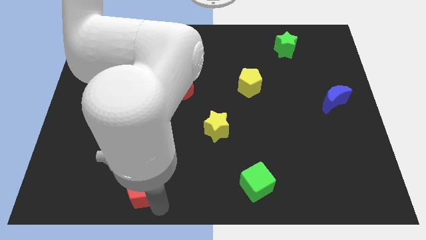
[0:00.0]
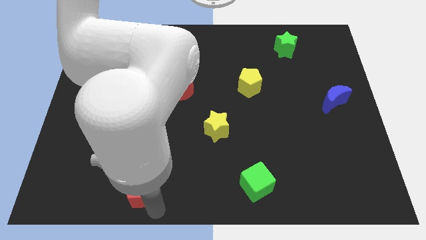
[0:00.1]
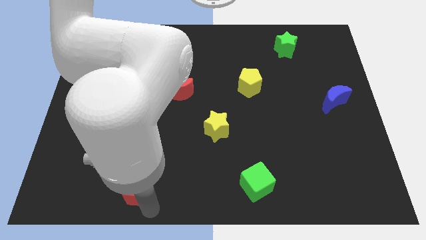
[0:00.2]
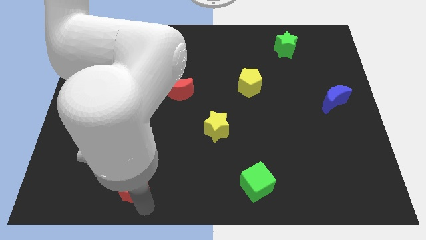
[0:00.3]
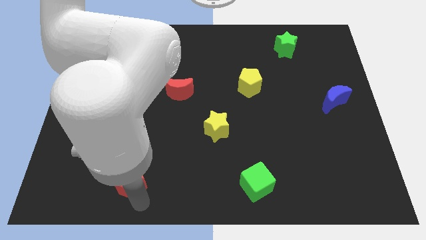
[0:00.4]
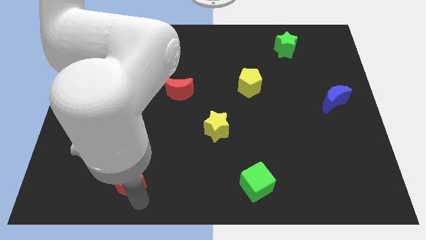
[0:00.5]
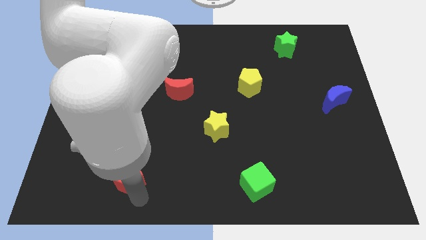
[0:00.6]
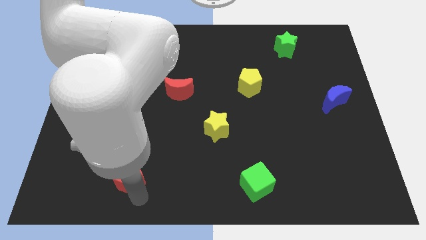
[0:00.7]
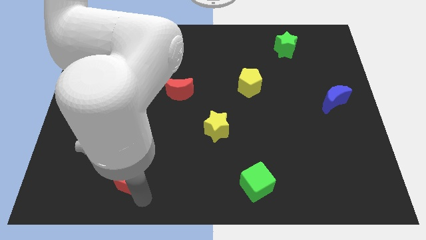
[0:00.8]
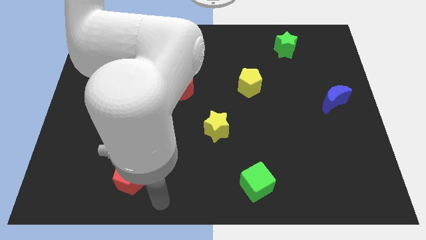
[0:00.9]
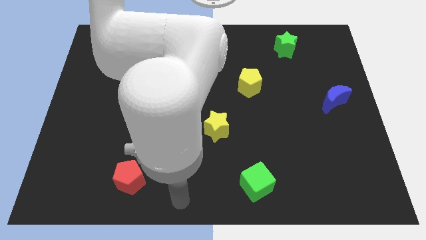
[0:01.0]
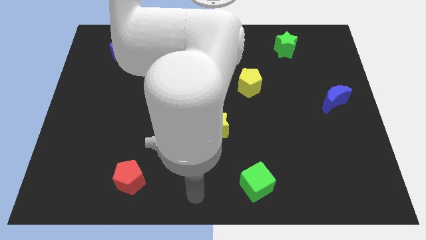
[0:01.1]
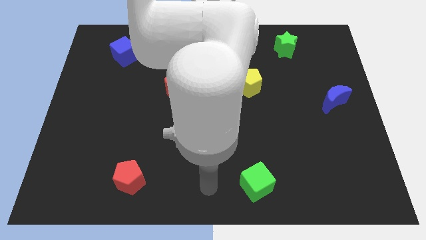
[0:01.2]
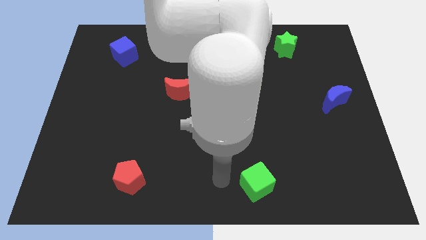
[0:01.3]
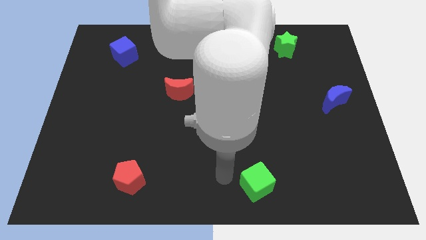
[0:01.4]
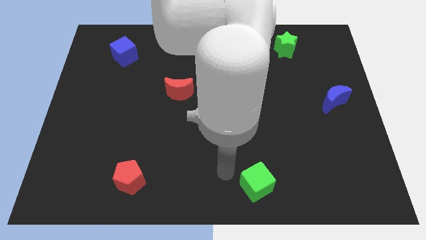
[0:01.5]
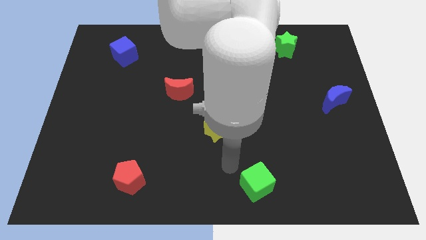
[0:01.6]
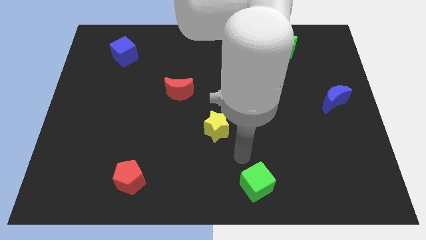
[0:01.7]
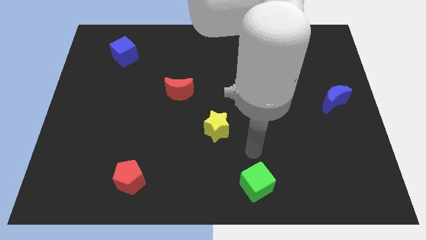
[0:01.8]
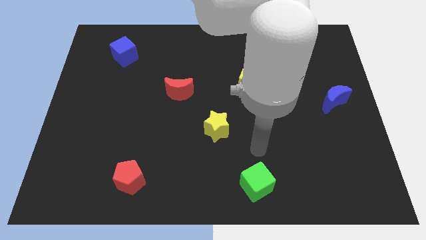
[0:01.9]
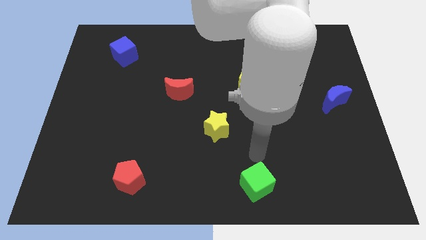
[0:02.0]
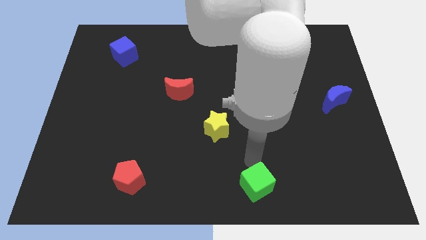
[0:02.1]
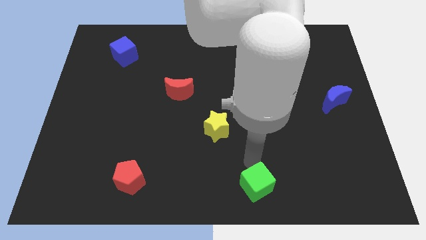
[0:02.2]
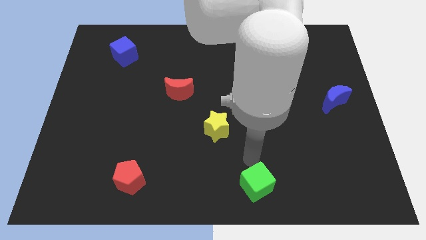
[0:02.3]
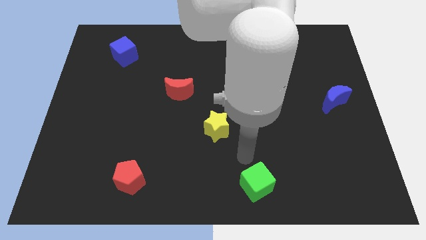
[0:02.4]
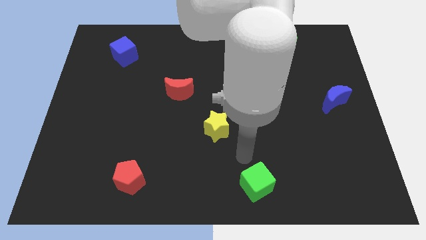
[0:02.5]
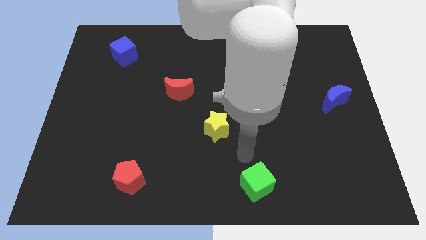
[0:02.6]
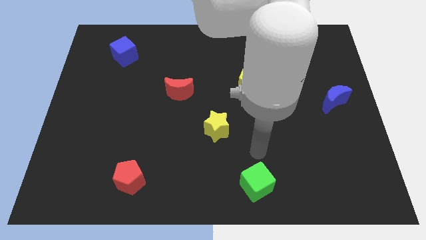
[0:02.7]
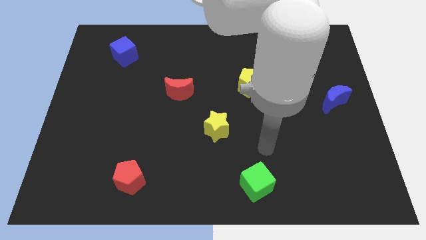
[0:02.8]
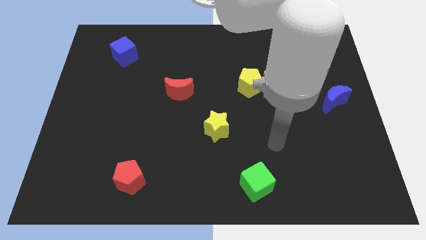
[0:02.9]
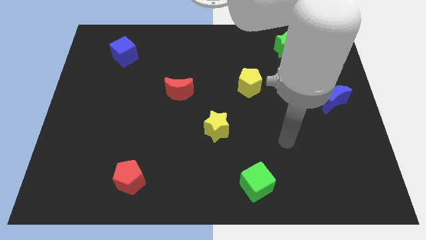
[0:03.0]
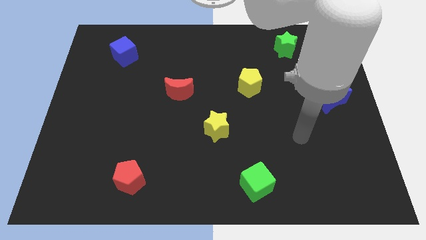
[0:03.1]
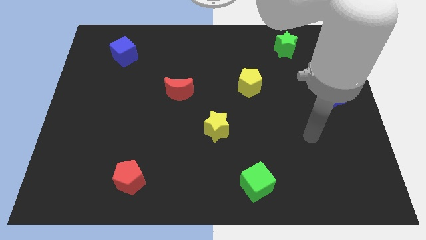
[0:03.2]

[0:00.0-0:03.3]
slightly push the red pentagon towards the top

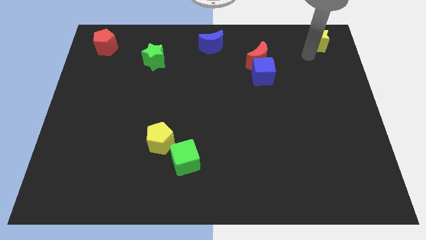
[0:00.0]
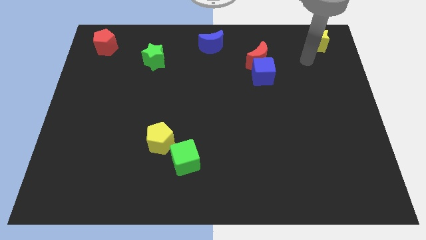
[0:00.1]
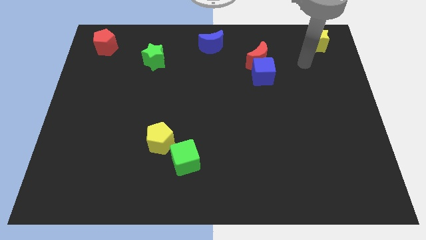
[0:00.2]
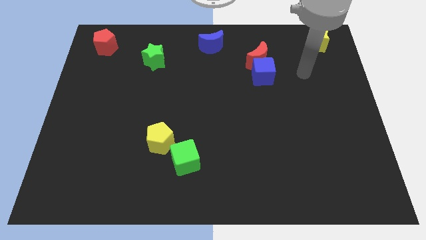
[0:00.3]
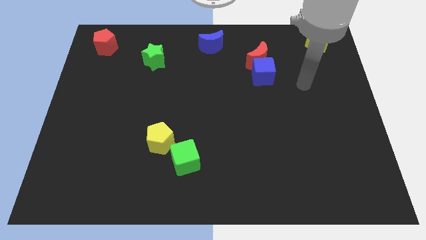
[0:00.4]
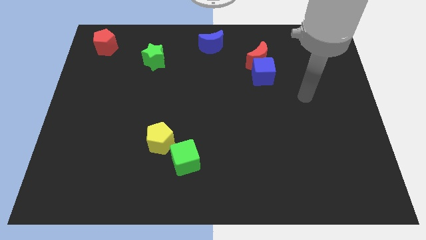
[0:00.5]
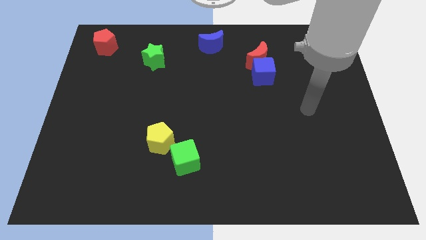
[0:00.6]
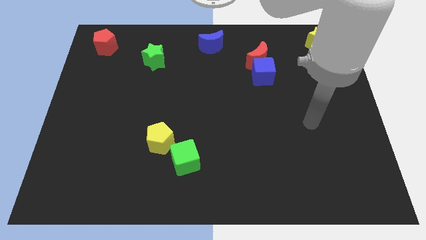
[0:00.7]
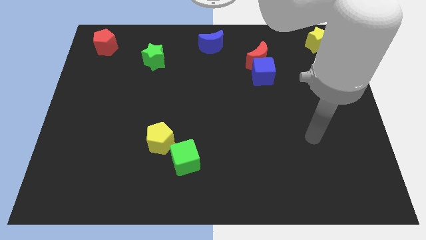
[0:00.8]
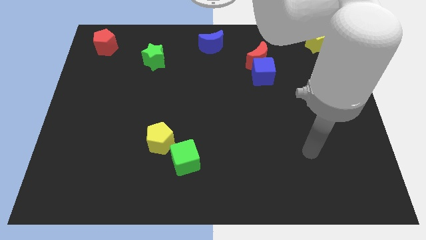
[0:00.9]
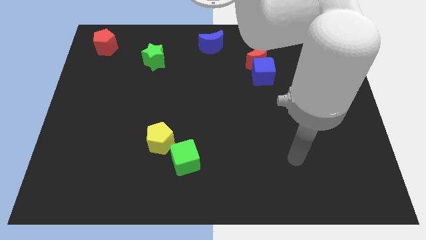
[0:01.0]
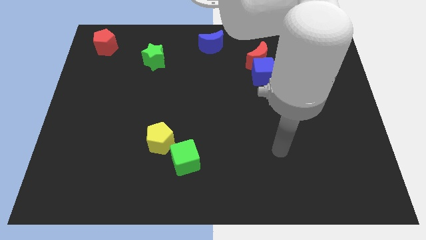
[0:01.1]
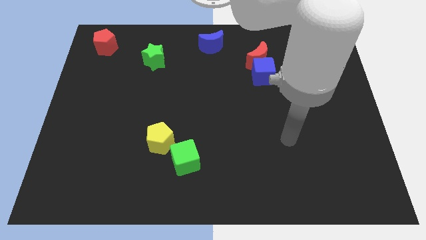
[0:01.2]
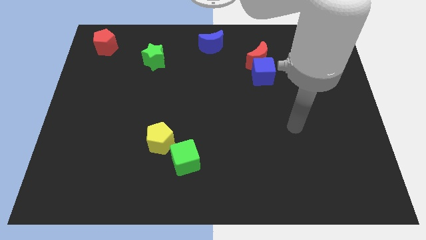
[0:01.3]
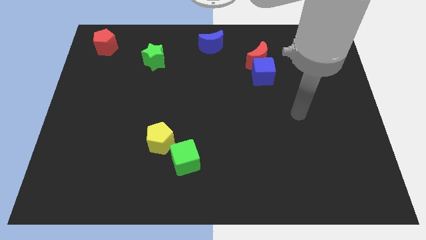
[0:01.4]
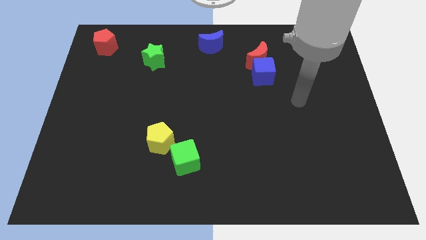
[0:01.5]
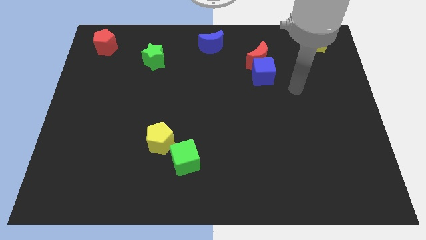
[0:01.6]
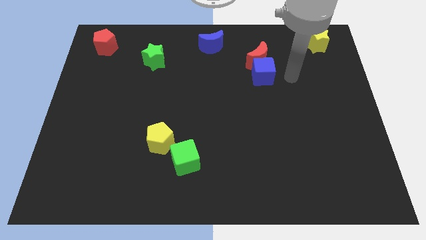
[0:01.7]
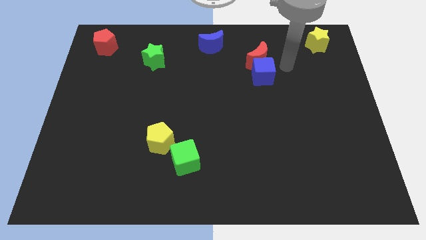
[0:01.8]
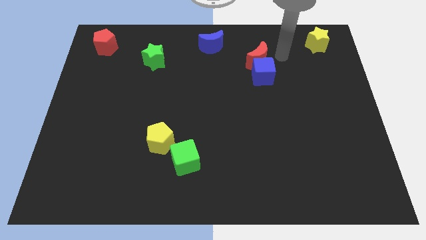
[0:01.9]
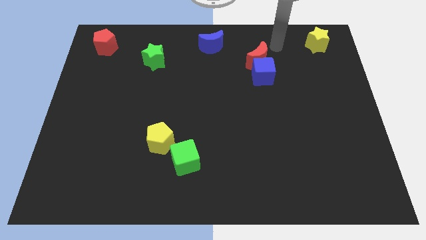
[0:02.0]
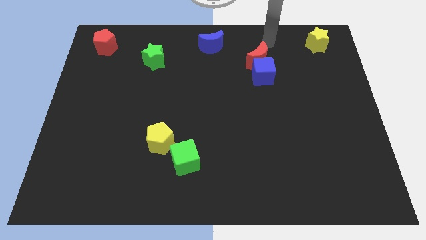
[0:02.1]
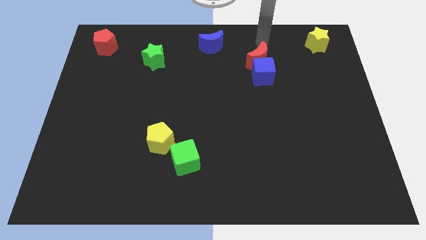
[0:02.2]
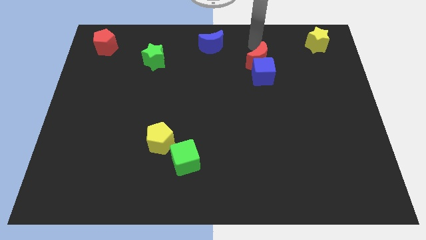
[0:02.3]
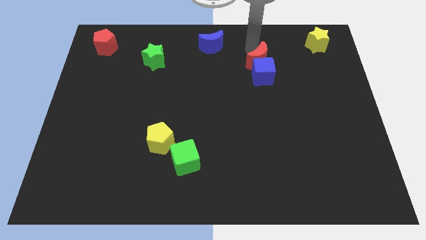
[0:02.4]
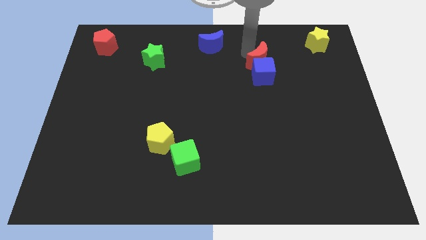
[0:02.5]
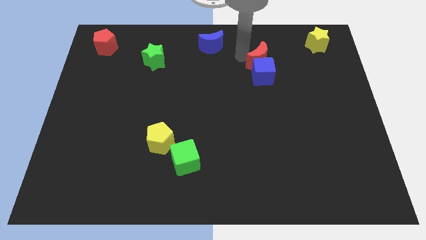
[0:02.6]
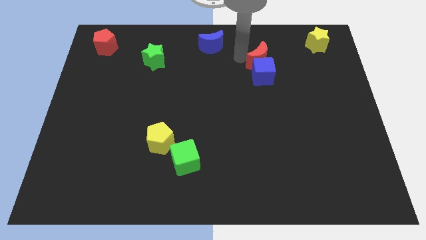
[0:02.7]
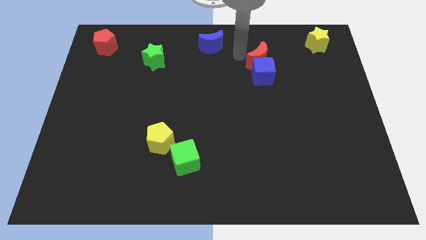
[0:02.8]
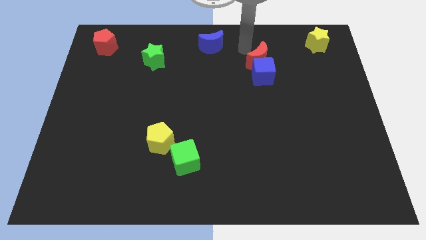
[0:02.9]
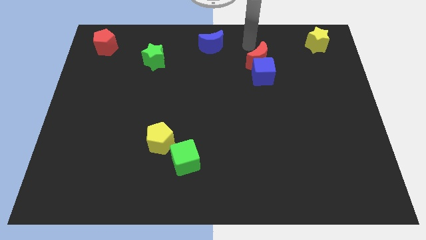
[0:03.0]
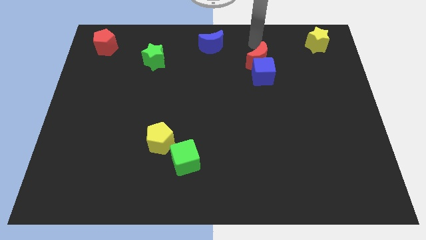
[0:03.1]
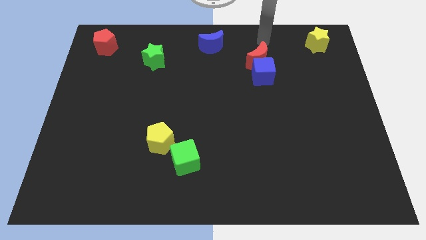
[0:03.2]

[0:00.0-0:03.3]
point your arm at the top of the red crescent

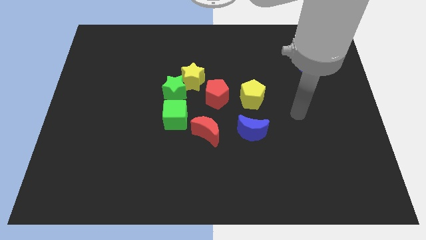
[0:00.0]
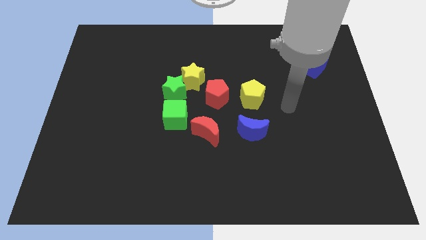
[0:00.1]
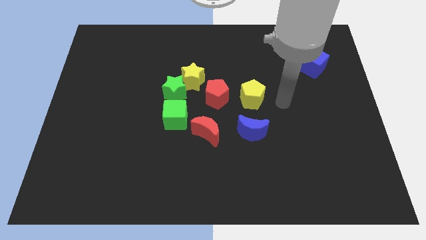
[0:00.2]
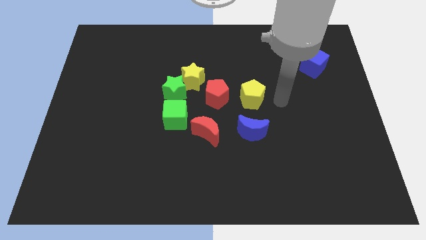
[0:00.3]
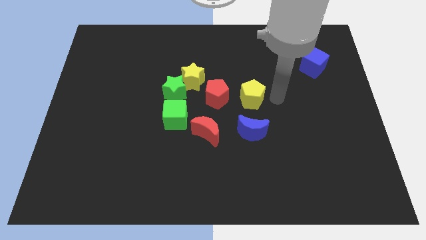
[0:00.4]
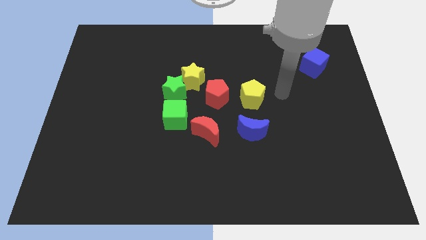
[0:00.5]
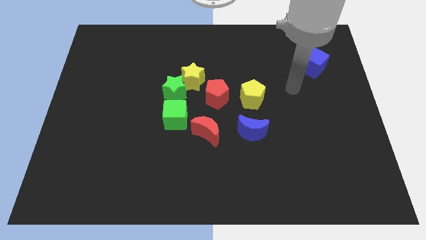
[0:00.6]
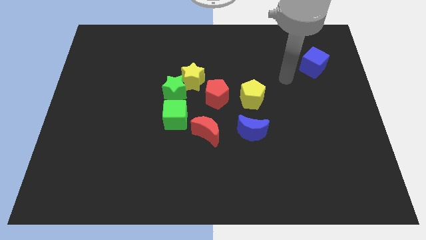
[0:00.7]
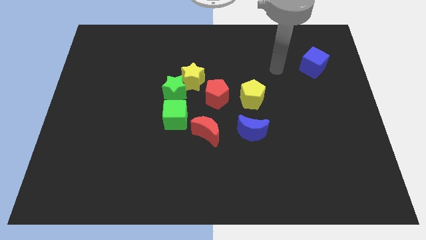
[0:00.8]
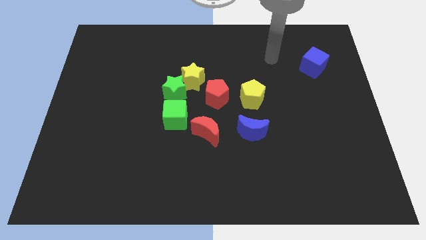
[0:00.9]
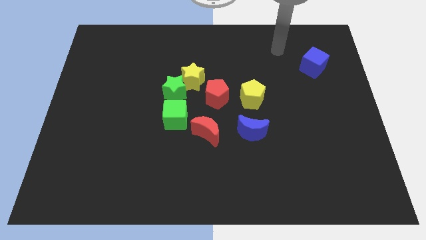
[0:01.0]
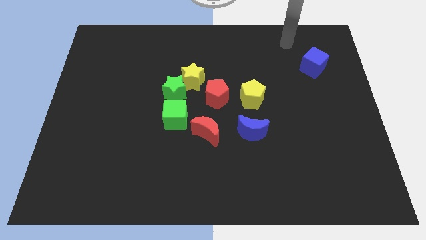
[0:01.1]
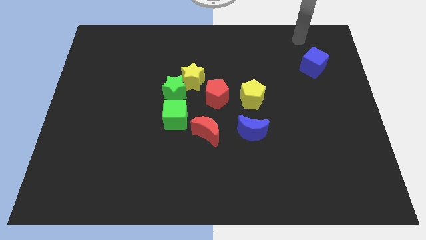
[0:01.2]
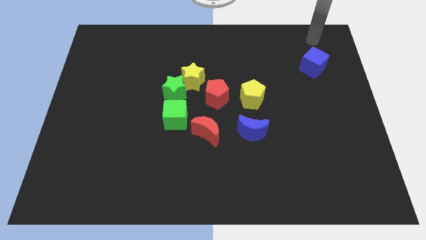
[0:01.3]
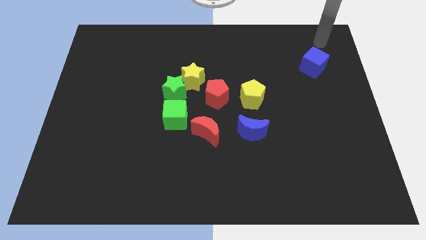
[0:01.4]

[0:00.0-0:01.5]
place the arm above the blue cube

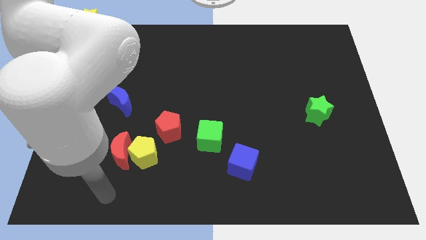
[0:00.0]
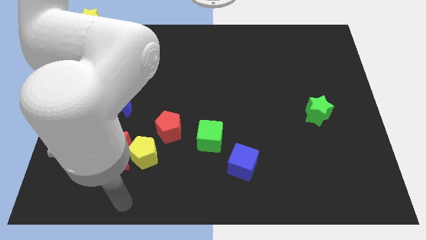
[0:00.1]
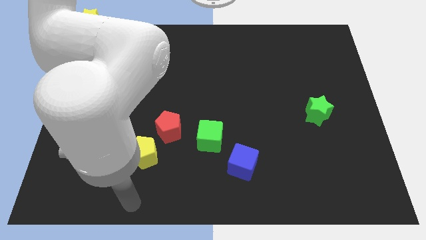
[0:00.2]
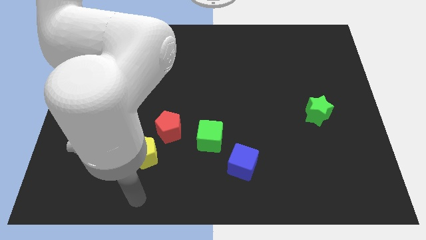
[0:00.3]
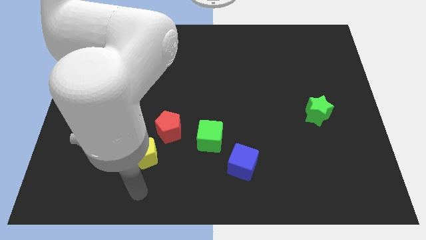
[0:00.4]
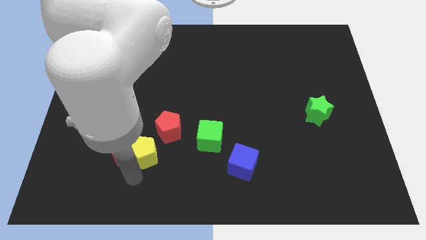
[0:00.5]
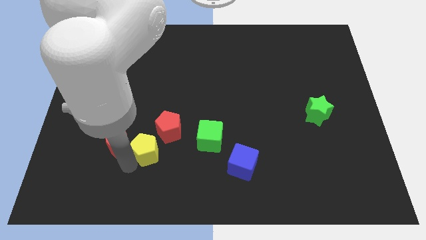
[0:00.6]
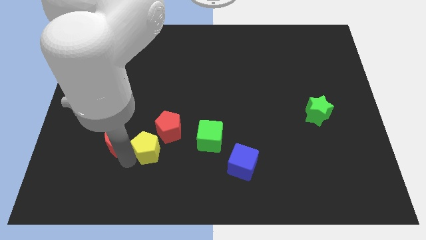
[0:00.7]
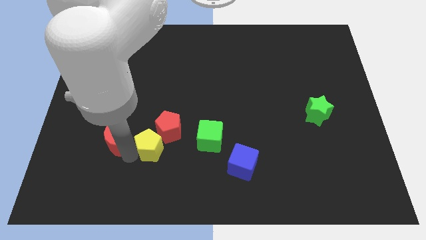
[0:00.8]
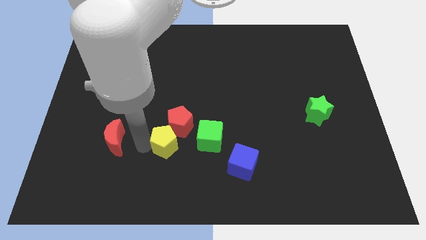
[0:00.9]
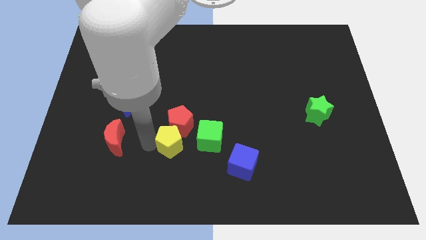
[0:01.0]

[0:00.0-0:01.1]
slide yellow pentagon into red pentagon
